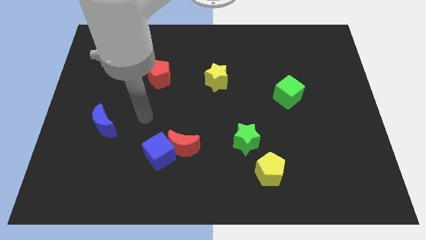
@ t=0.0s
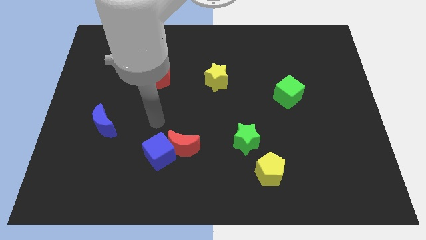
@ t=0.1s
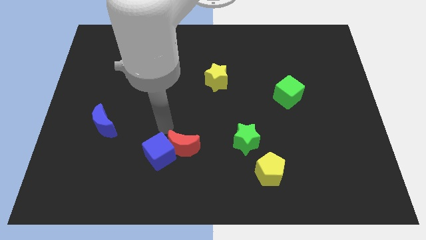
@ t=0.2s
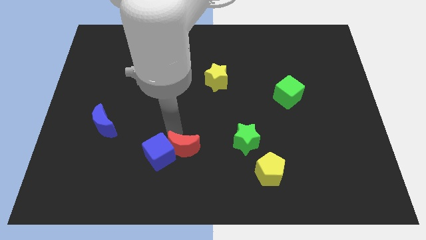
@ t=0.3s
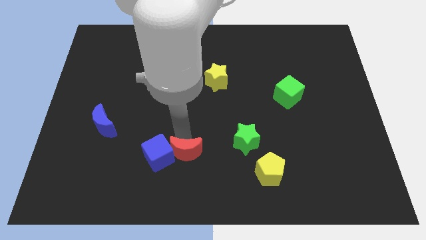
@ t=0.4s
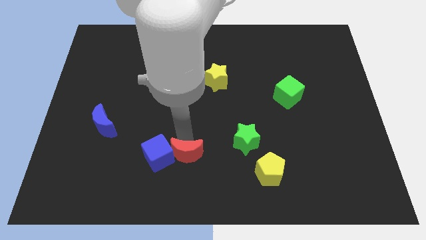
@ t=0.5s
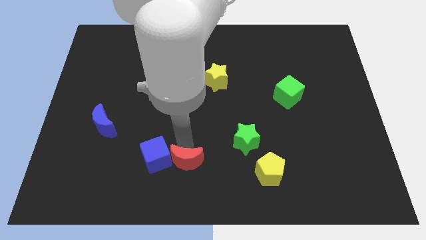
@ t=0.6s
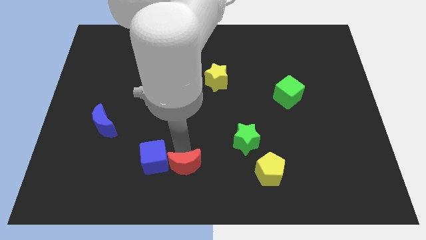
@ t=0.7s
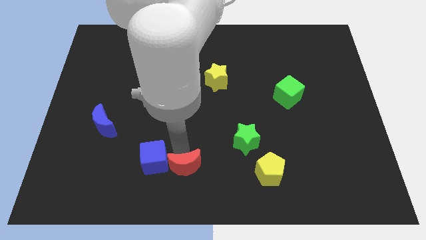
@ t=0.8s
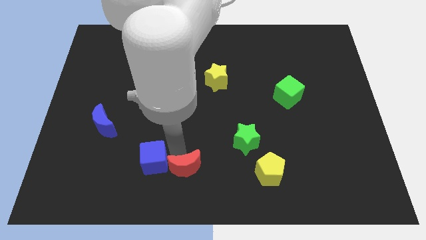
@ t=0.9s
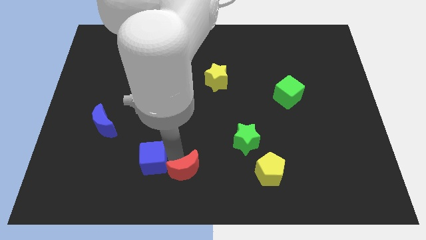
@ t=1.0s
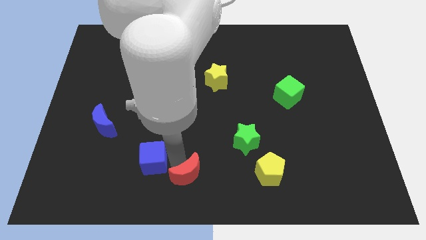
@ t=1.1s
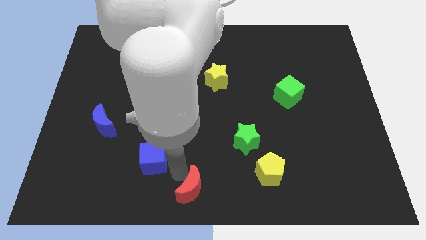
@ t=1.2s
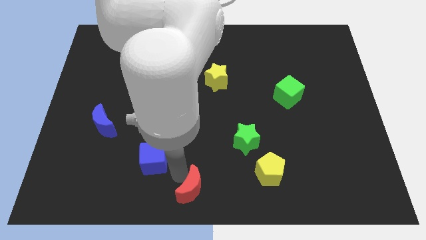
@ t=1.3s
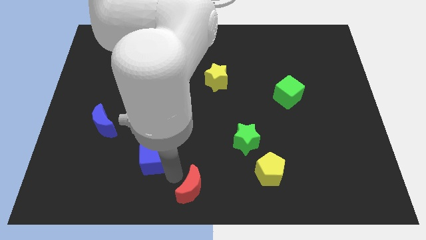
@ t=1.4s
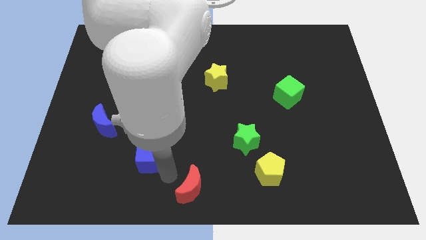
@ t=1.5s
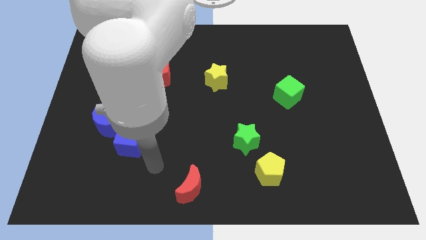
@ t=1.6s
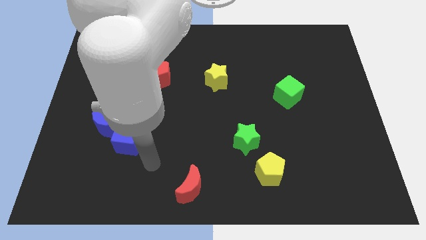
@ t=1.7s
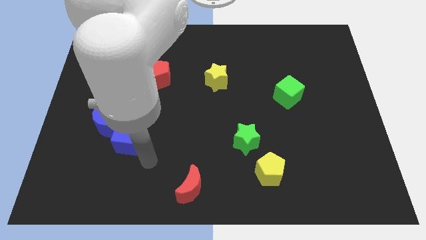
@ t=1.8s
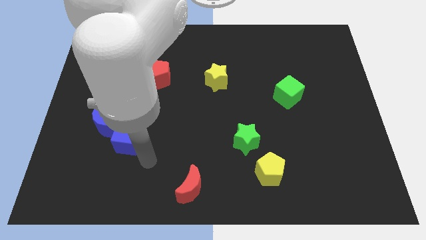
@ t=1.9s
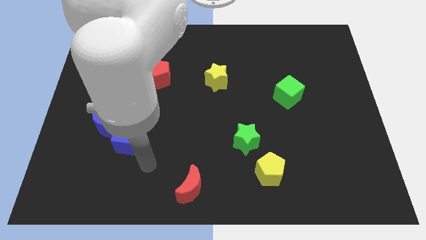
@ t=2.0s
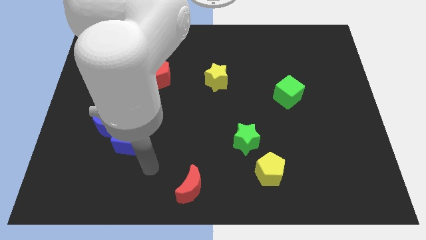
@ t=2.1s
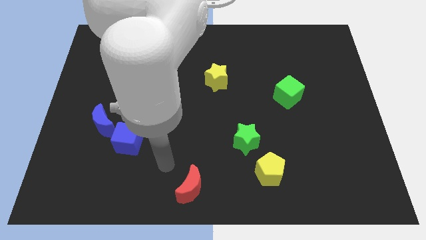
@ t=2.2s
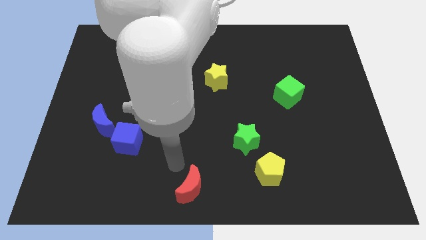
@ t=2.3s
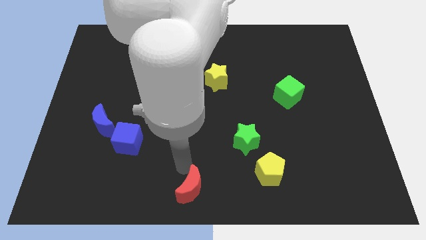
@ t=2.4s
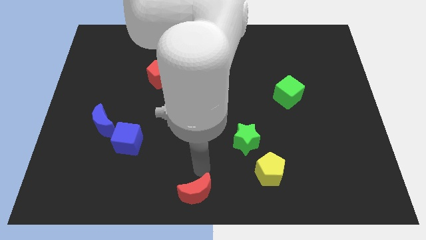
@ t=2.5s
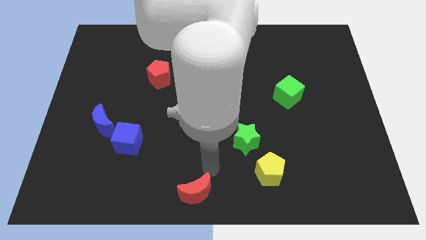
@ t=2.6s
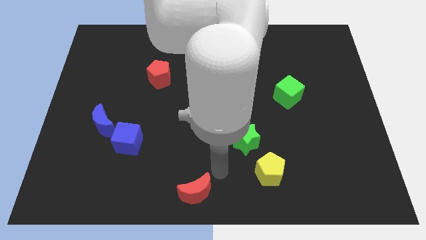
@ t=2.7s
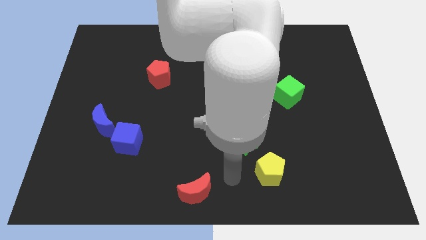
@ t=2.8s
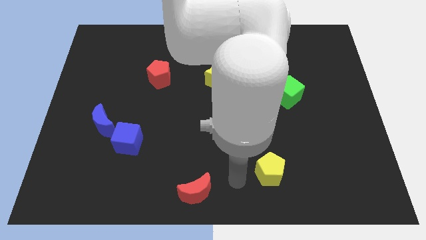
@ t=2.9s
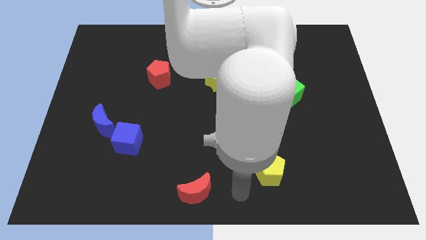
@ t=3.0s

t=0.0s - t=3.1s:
separate the blue cube and red moon

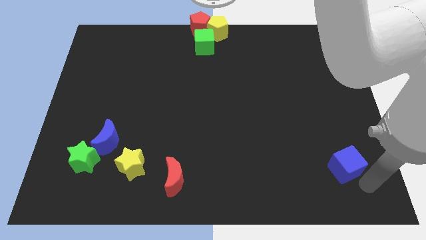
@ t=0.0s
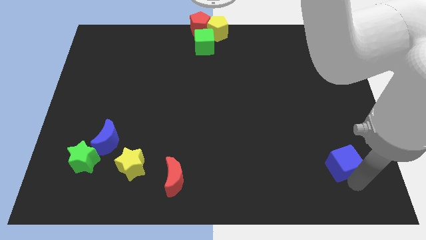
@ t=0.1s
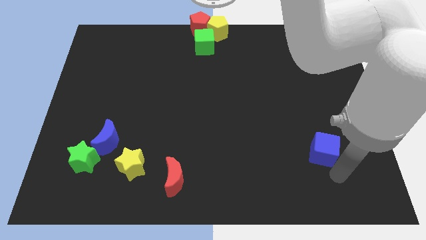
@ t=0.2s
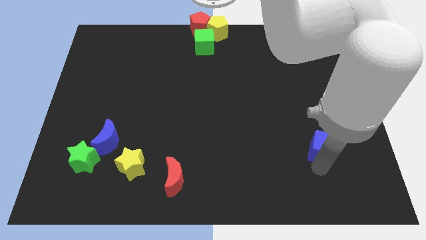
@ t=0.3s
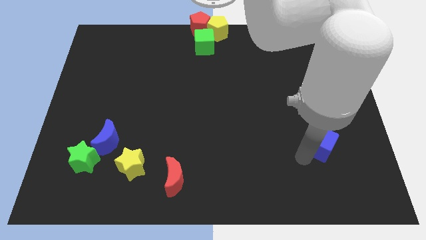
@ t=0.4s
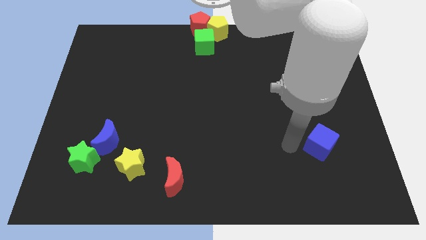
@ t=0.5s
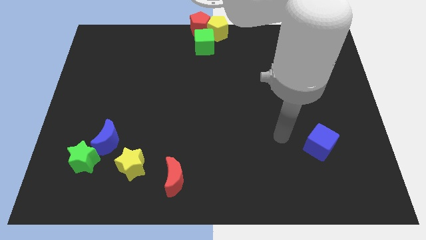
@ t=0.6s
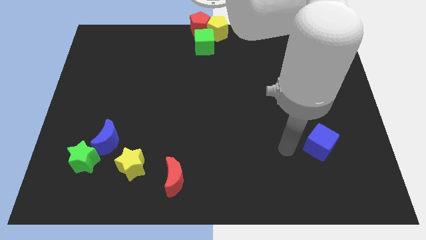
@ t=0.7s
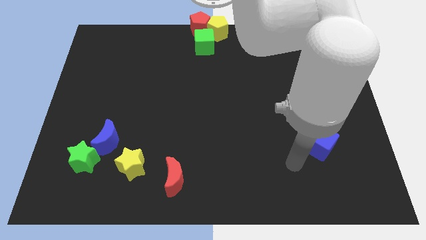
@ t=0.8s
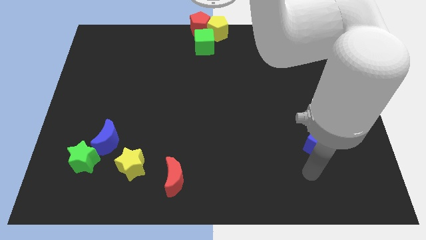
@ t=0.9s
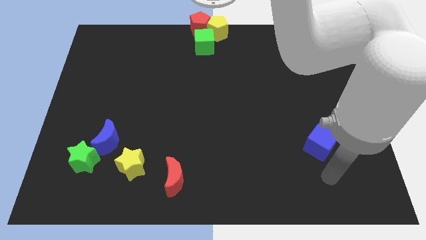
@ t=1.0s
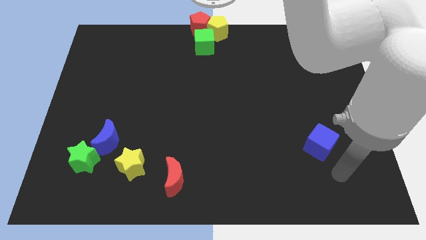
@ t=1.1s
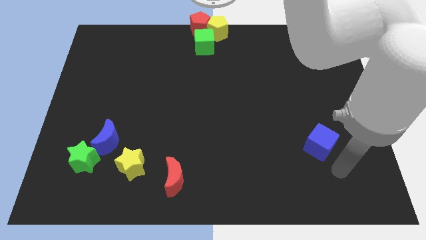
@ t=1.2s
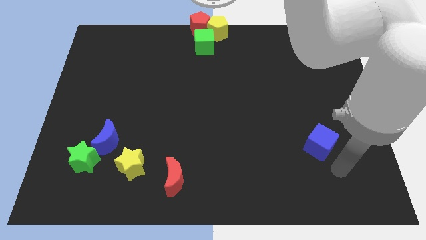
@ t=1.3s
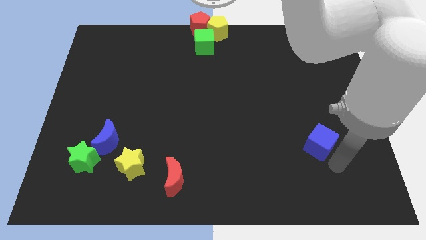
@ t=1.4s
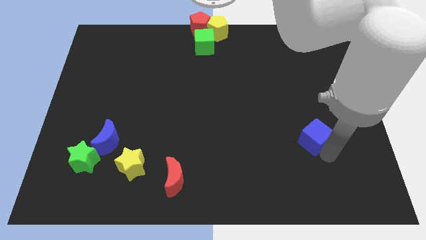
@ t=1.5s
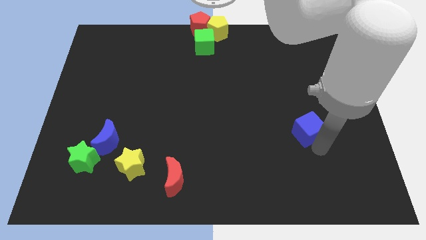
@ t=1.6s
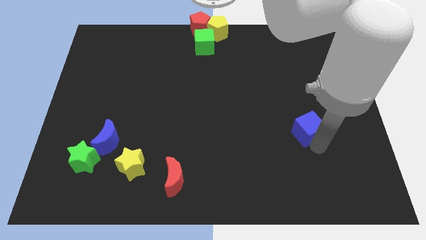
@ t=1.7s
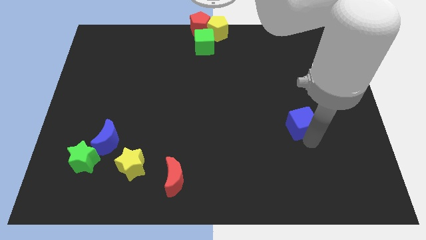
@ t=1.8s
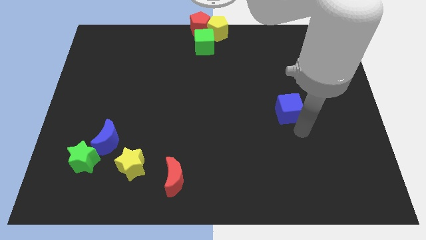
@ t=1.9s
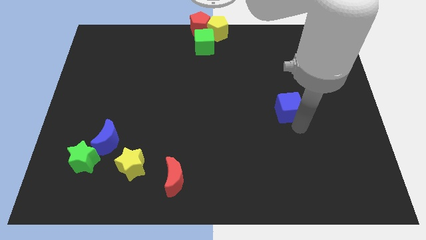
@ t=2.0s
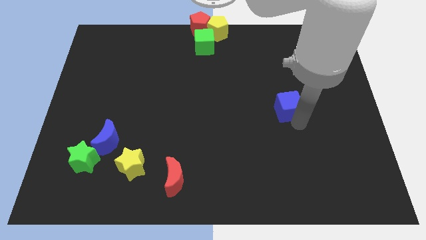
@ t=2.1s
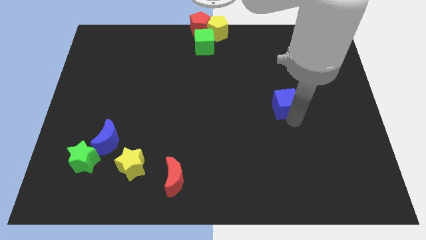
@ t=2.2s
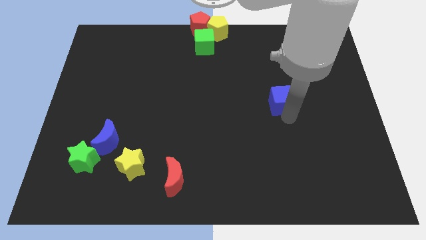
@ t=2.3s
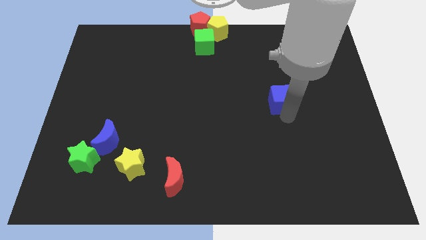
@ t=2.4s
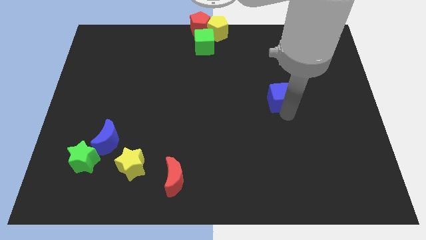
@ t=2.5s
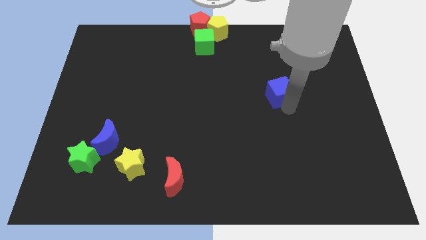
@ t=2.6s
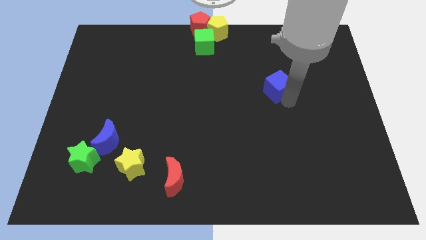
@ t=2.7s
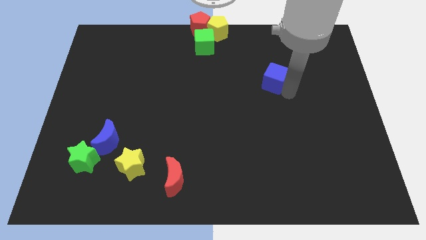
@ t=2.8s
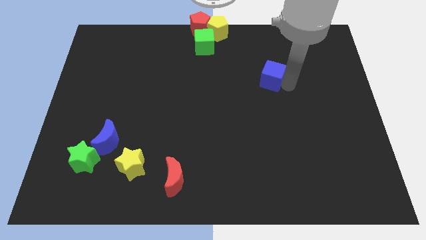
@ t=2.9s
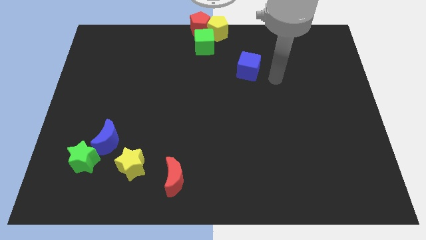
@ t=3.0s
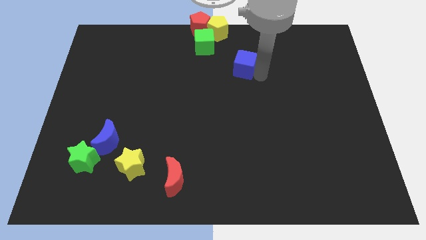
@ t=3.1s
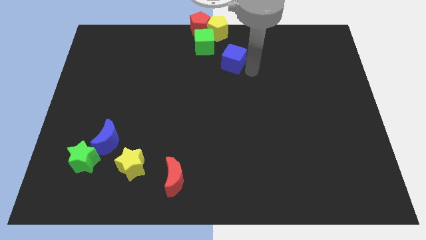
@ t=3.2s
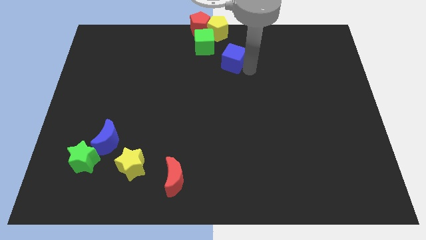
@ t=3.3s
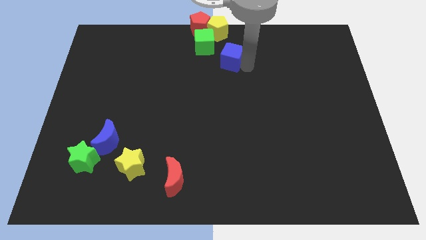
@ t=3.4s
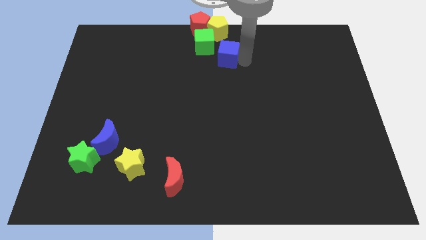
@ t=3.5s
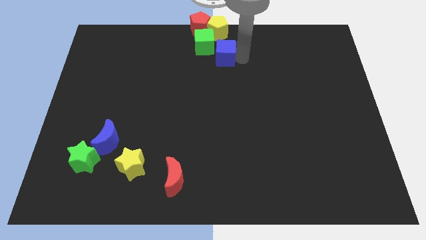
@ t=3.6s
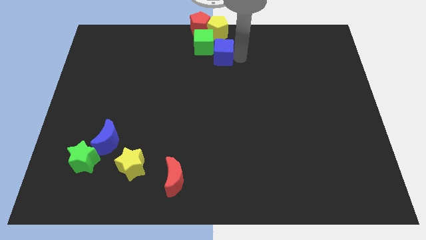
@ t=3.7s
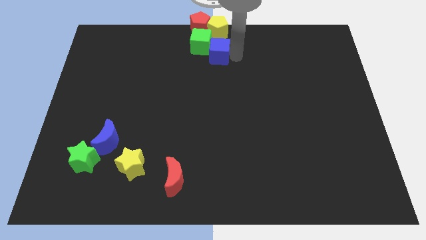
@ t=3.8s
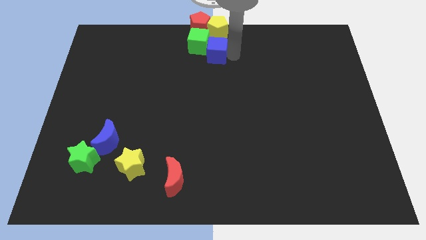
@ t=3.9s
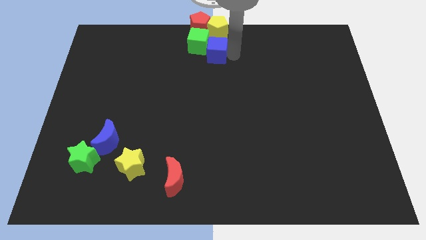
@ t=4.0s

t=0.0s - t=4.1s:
slide the blue cube into the group of blocks

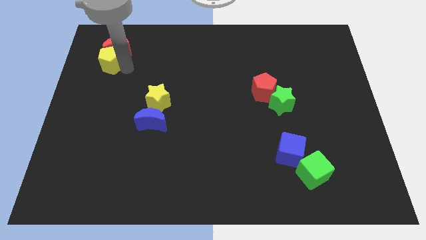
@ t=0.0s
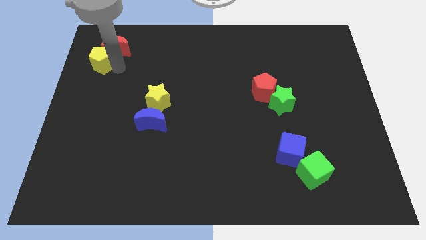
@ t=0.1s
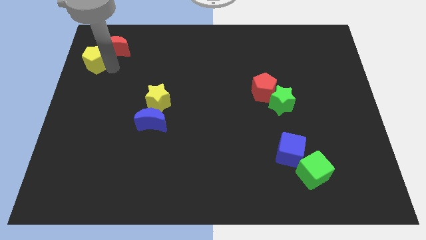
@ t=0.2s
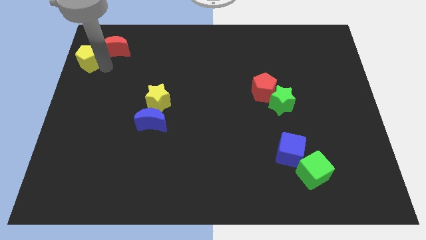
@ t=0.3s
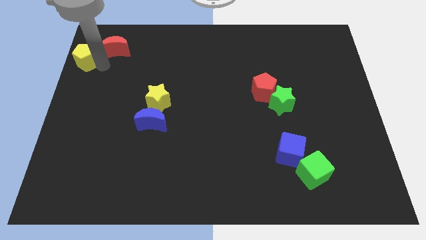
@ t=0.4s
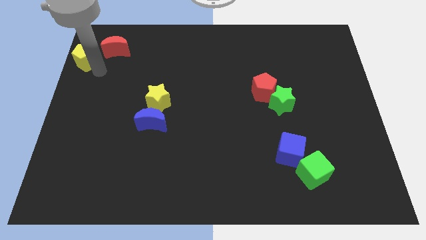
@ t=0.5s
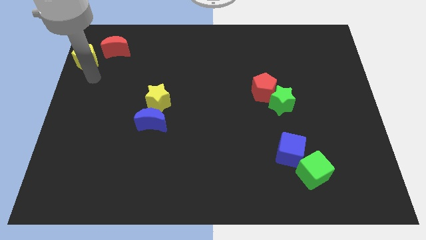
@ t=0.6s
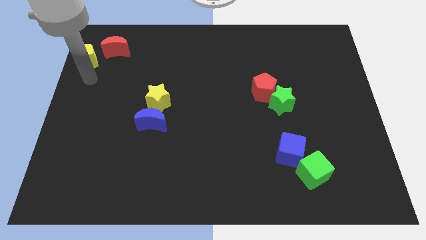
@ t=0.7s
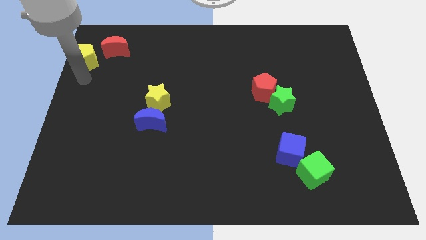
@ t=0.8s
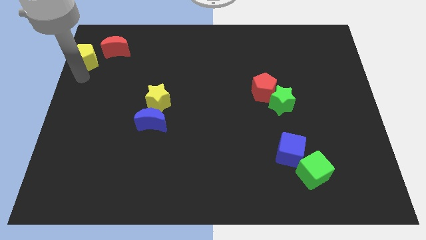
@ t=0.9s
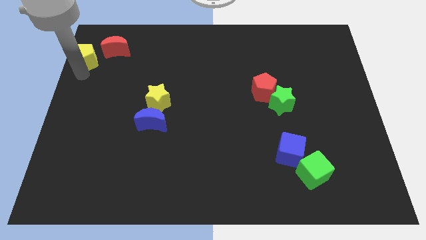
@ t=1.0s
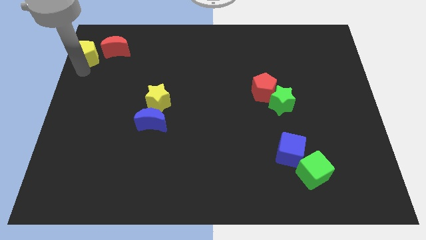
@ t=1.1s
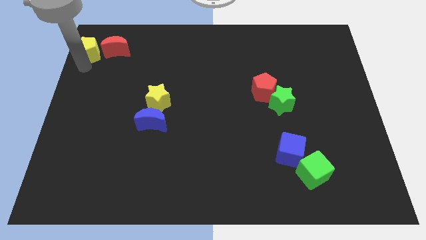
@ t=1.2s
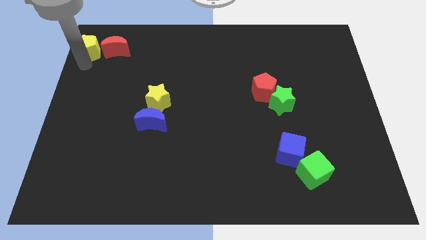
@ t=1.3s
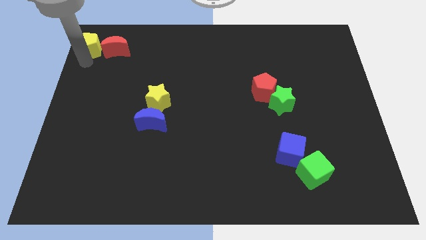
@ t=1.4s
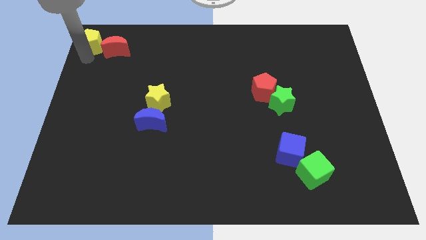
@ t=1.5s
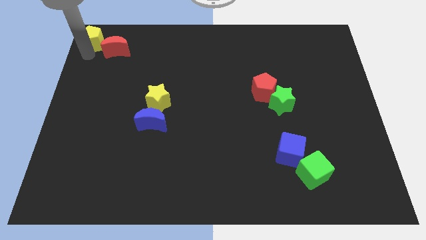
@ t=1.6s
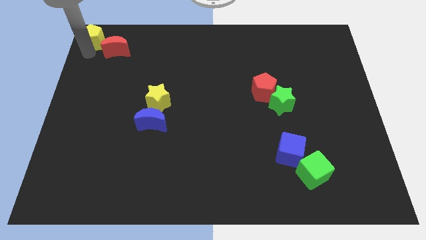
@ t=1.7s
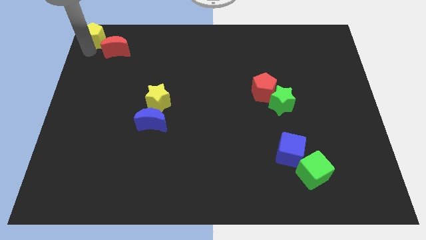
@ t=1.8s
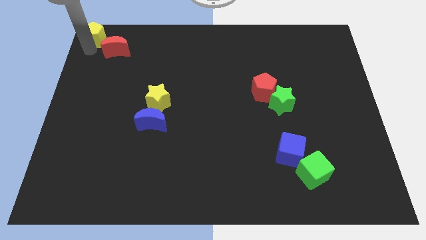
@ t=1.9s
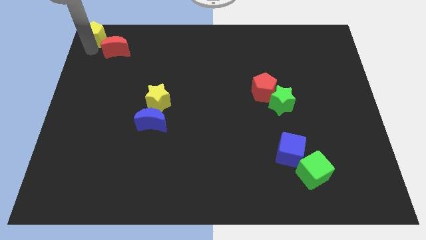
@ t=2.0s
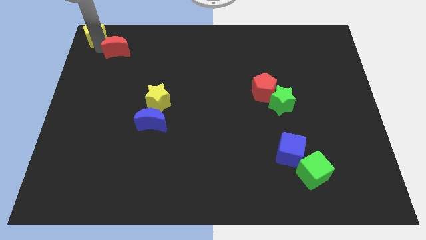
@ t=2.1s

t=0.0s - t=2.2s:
push the yellow pentagon to the top left corner of the board
